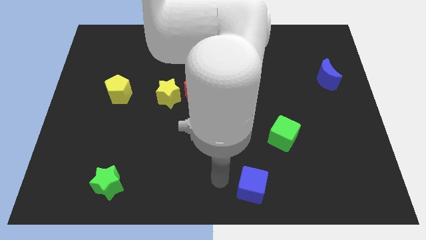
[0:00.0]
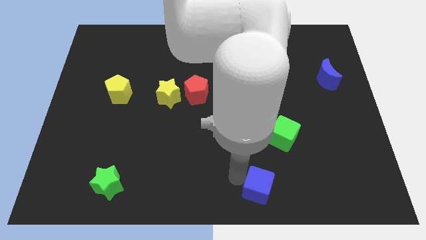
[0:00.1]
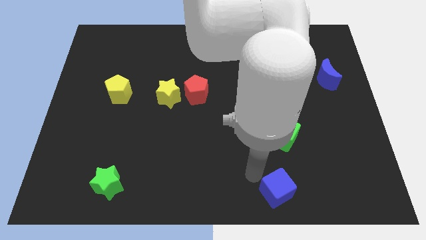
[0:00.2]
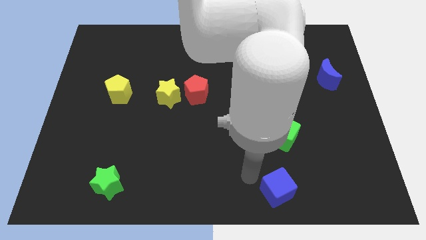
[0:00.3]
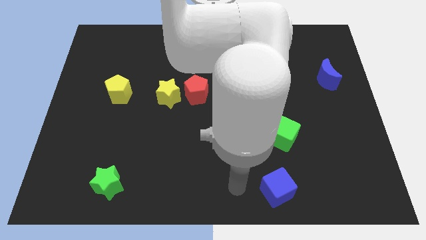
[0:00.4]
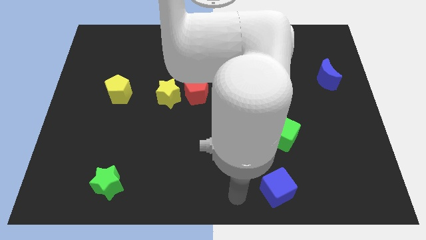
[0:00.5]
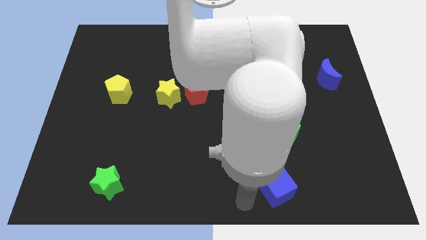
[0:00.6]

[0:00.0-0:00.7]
place the blue cube vertically below the green cube

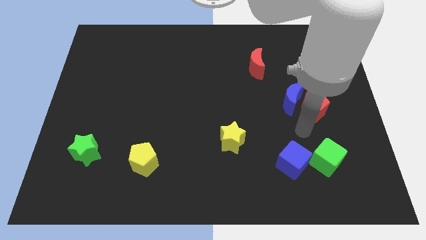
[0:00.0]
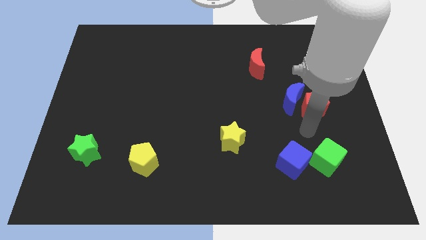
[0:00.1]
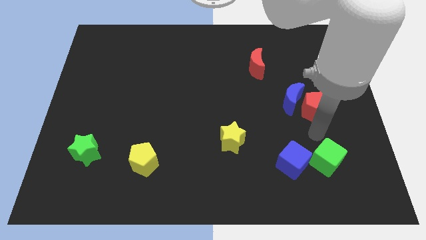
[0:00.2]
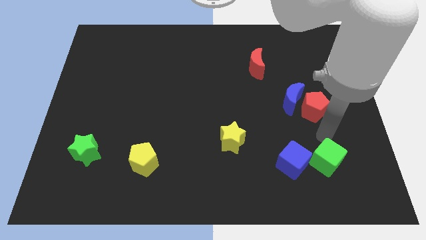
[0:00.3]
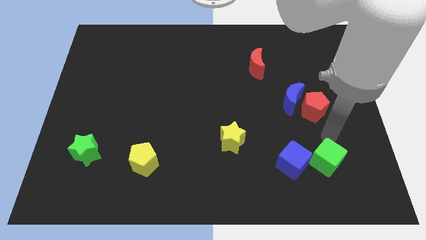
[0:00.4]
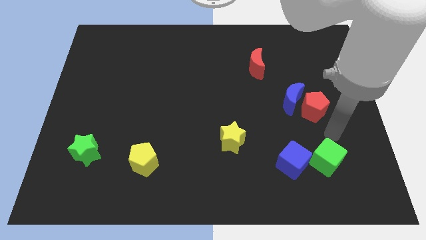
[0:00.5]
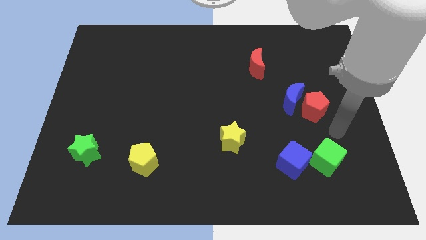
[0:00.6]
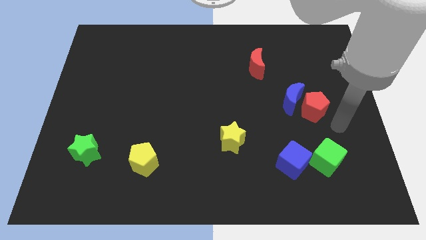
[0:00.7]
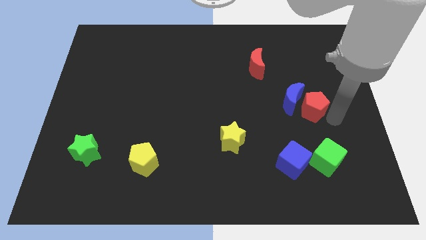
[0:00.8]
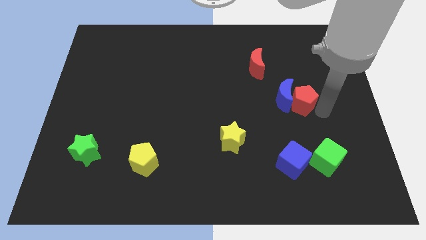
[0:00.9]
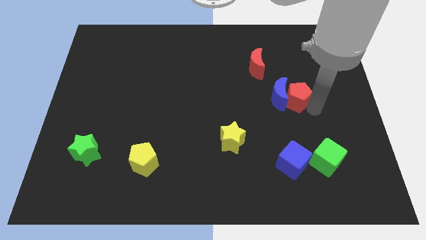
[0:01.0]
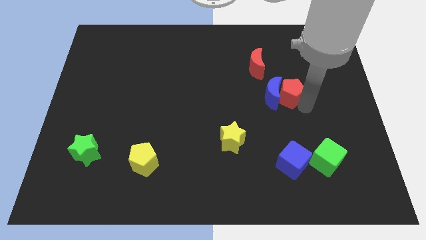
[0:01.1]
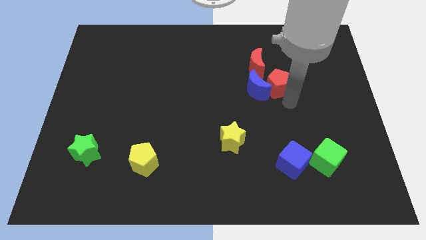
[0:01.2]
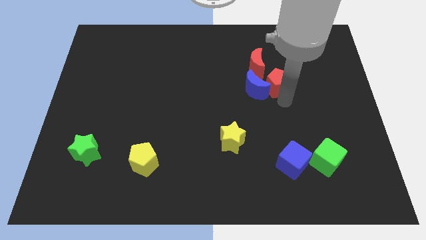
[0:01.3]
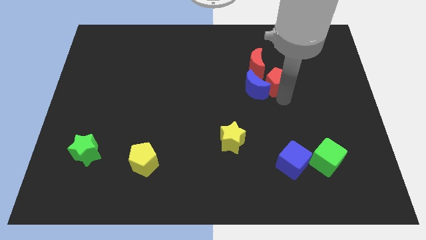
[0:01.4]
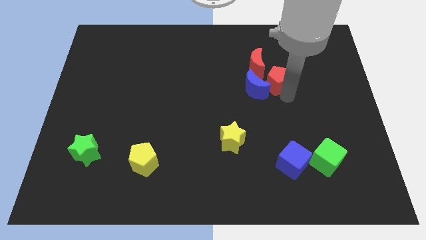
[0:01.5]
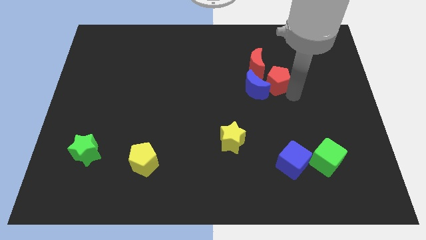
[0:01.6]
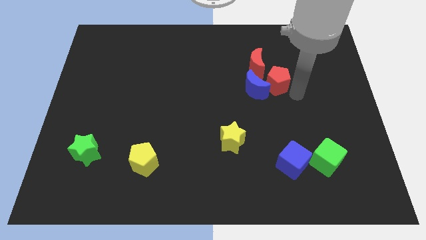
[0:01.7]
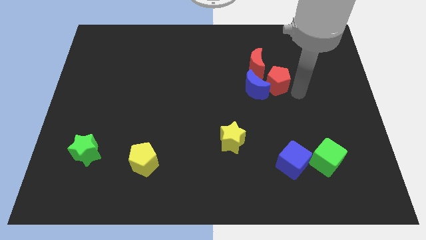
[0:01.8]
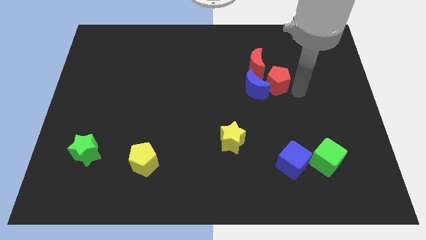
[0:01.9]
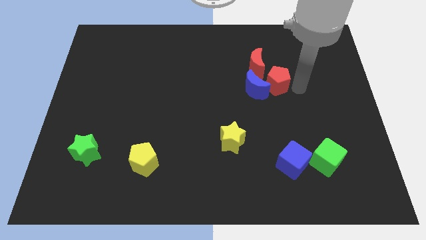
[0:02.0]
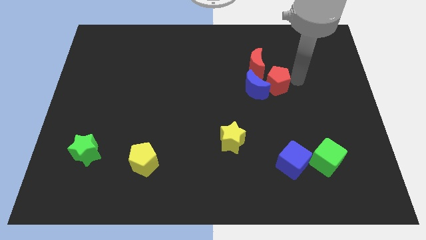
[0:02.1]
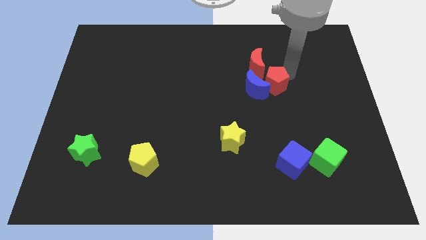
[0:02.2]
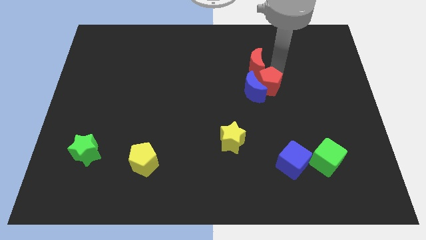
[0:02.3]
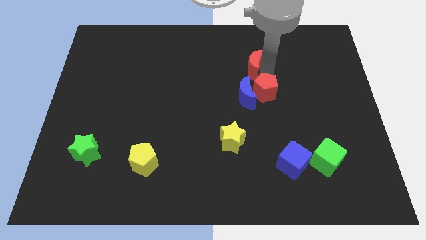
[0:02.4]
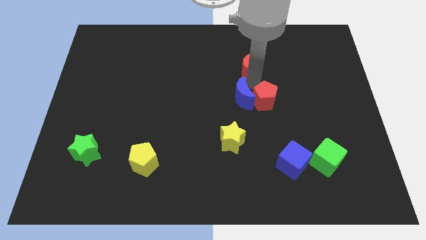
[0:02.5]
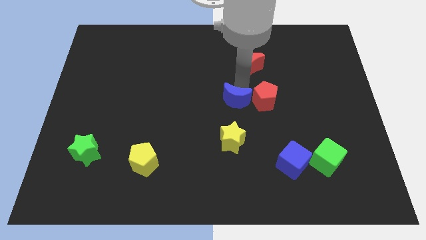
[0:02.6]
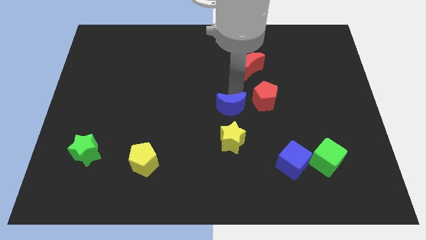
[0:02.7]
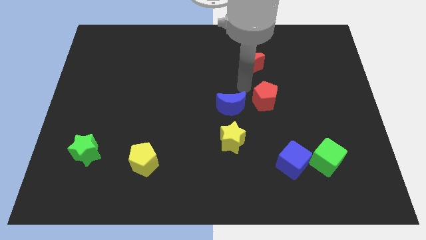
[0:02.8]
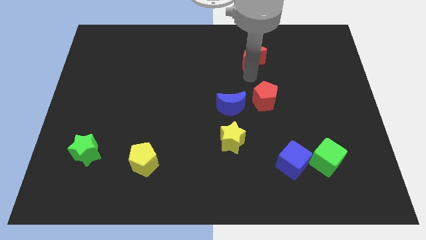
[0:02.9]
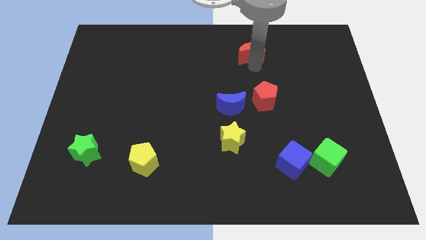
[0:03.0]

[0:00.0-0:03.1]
move the blue crescent vertically to the top of the yellow star

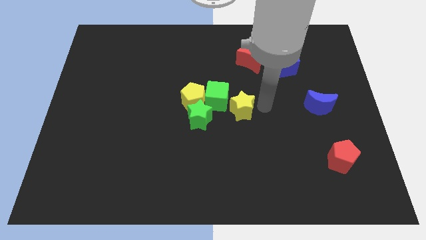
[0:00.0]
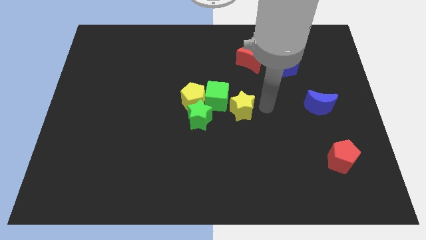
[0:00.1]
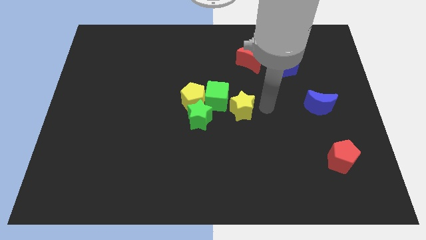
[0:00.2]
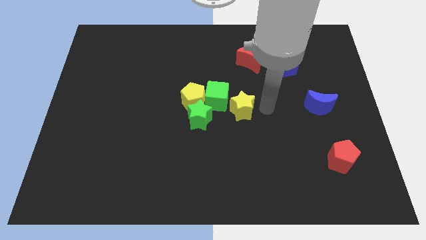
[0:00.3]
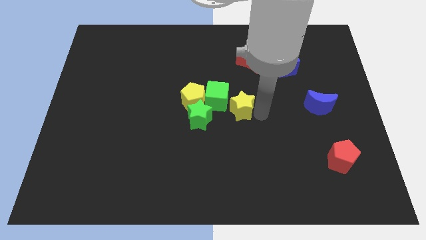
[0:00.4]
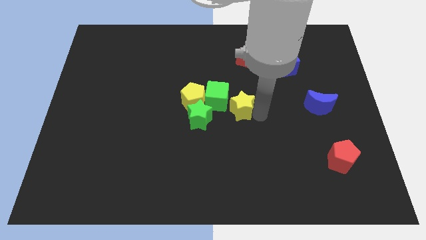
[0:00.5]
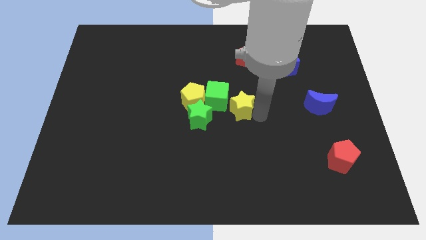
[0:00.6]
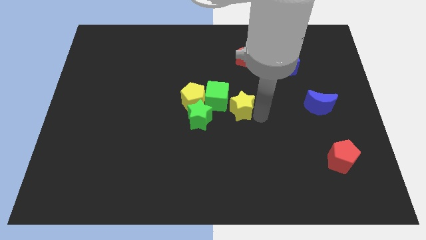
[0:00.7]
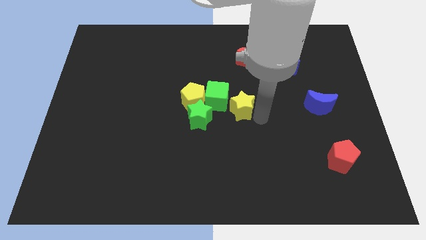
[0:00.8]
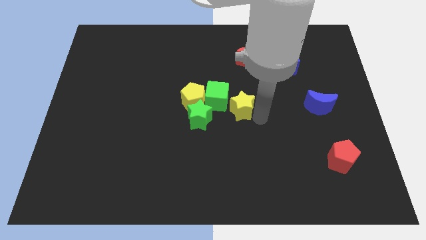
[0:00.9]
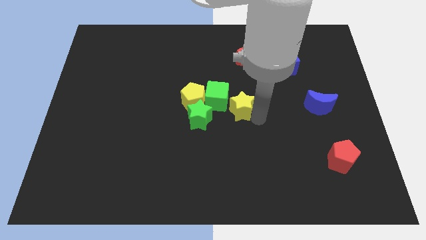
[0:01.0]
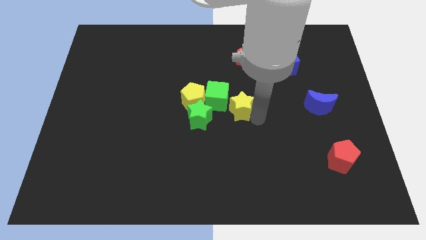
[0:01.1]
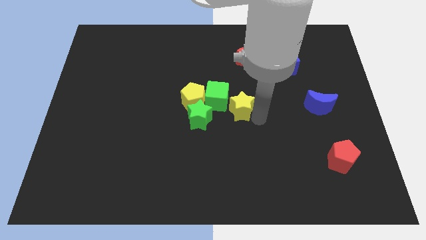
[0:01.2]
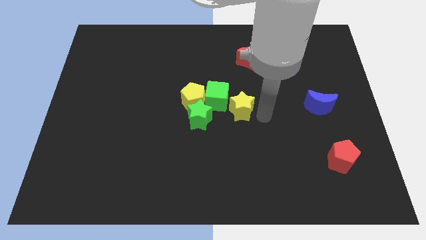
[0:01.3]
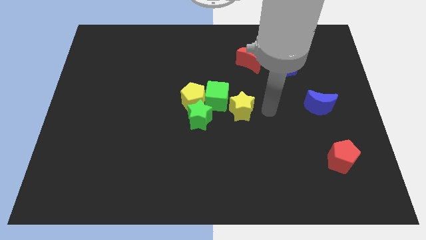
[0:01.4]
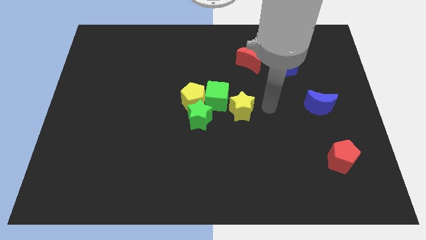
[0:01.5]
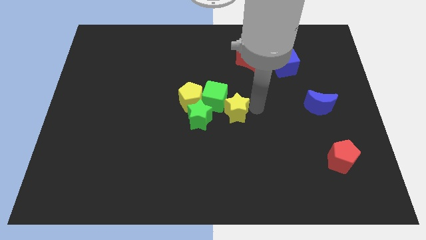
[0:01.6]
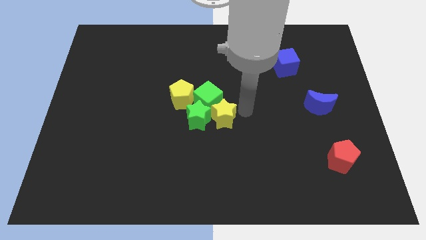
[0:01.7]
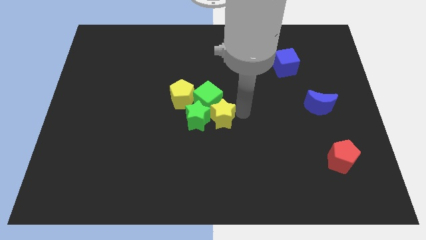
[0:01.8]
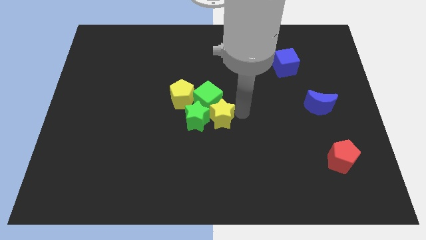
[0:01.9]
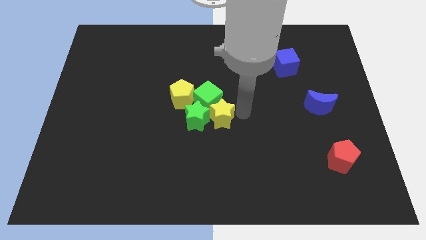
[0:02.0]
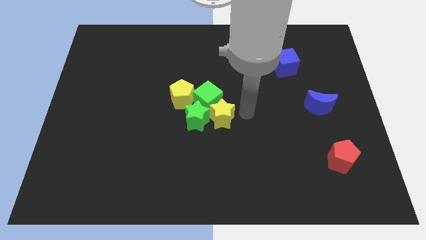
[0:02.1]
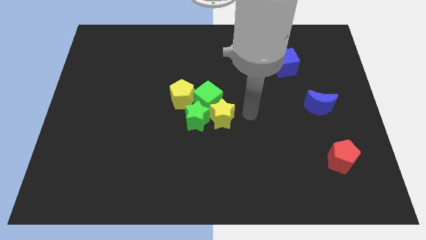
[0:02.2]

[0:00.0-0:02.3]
push the yellow star in to the center of the board

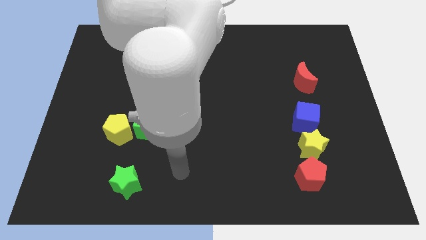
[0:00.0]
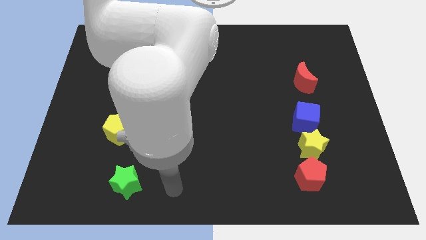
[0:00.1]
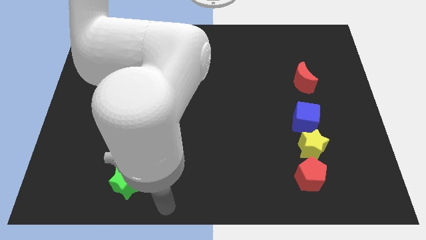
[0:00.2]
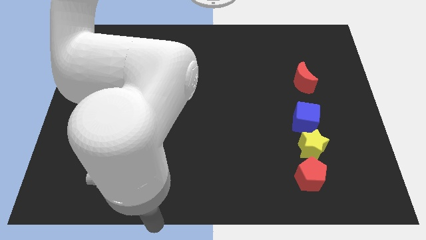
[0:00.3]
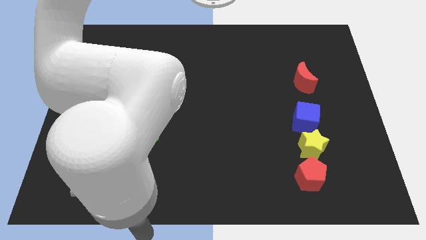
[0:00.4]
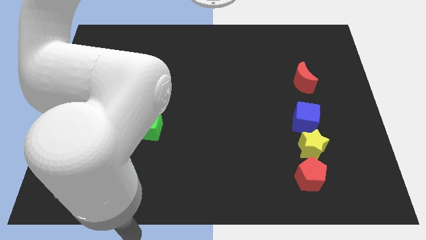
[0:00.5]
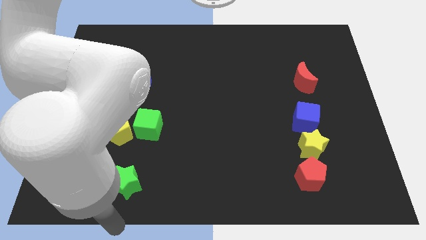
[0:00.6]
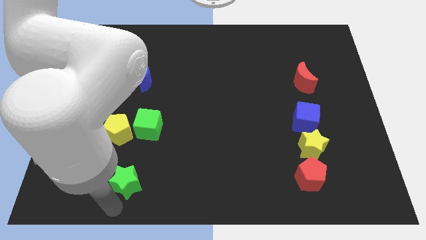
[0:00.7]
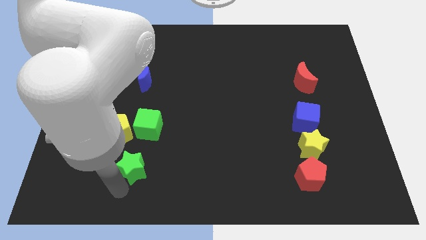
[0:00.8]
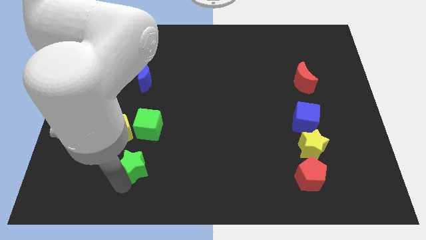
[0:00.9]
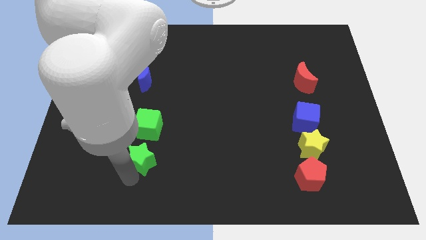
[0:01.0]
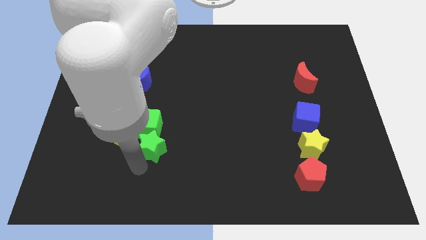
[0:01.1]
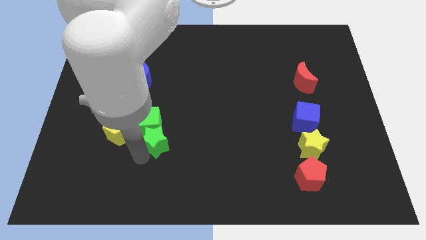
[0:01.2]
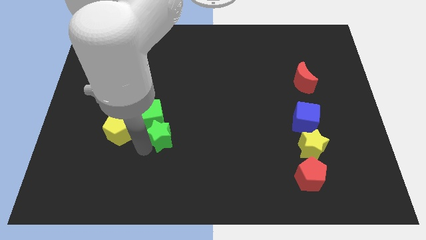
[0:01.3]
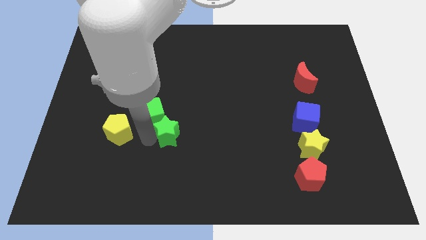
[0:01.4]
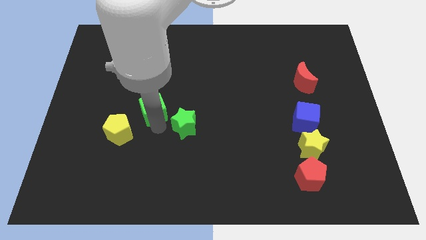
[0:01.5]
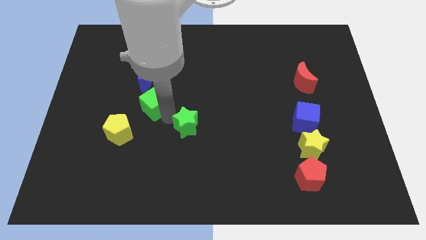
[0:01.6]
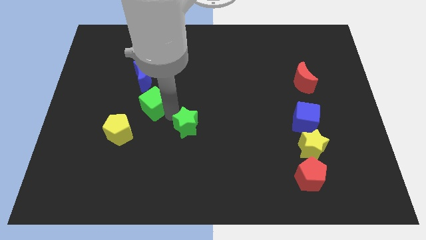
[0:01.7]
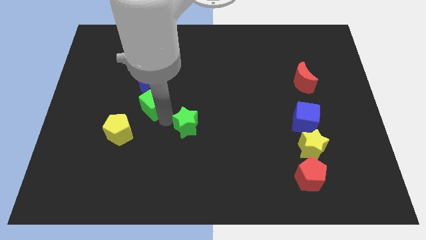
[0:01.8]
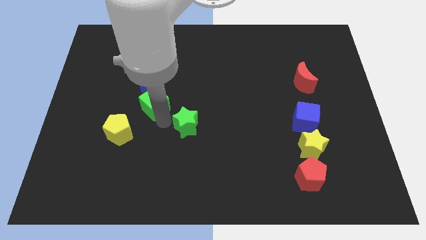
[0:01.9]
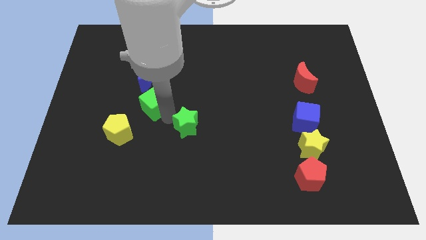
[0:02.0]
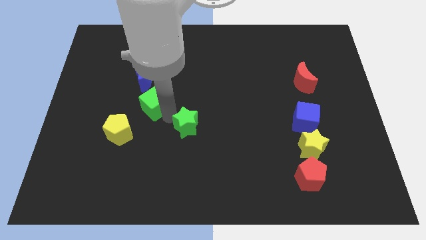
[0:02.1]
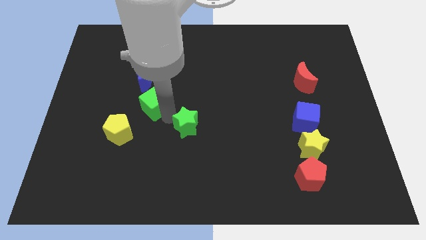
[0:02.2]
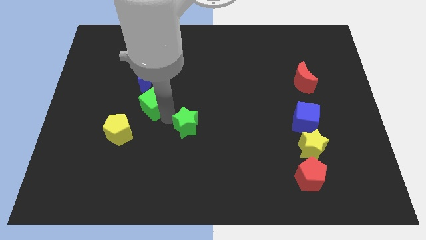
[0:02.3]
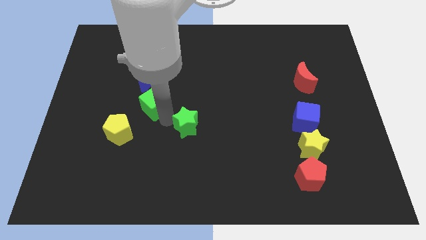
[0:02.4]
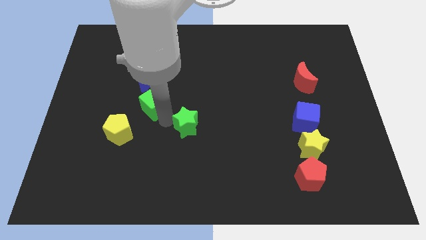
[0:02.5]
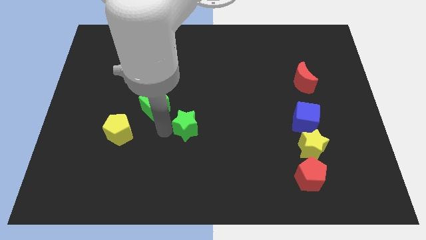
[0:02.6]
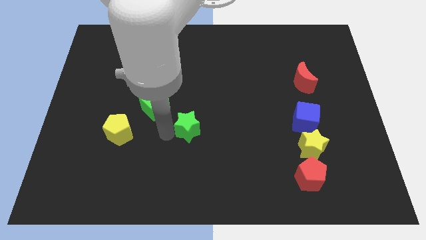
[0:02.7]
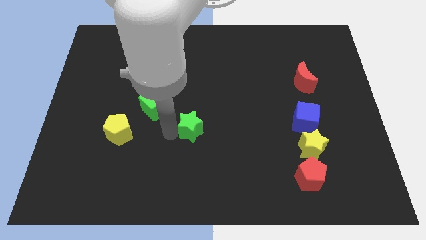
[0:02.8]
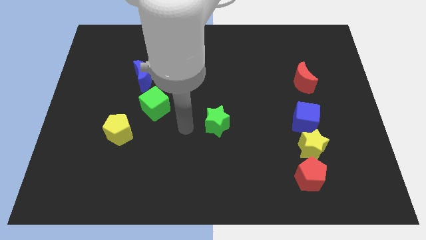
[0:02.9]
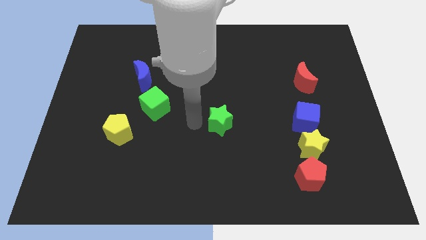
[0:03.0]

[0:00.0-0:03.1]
move the green star towards the right side
